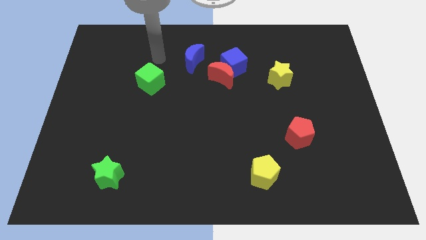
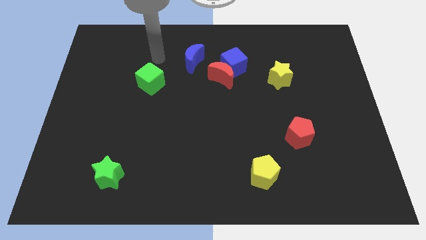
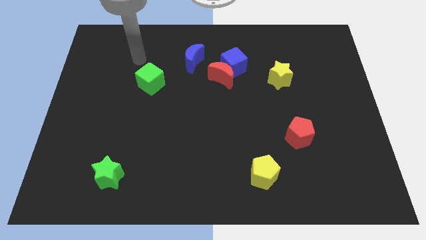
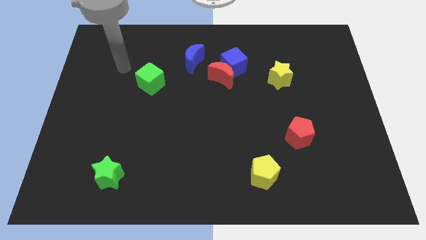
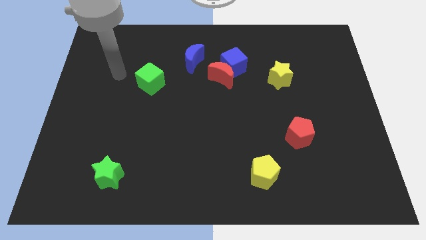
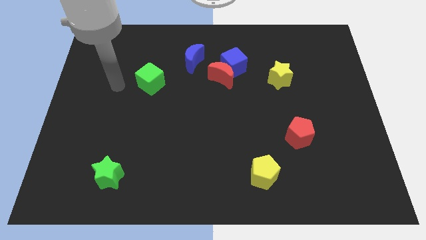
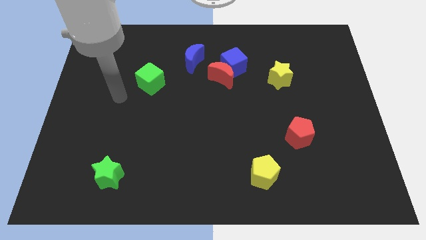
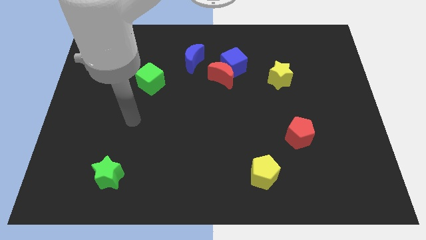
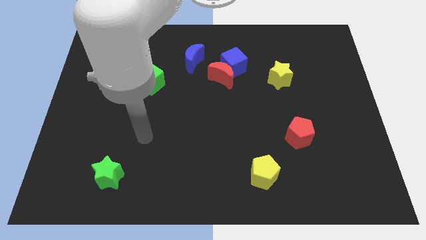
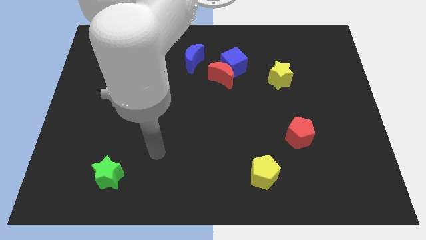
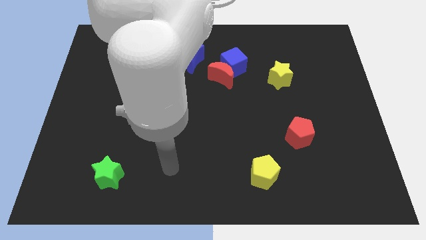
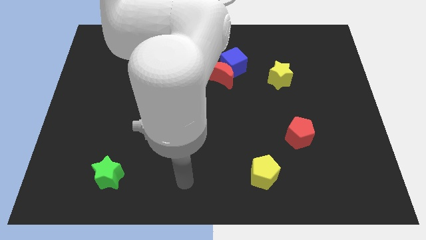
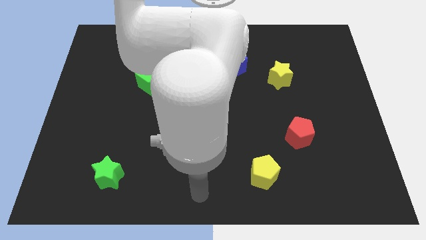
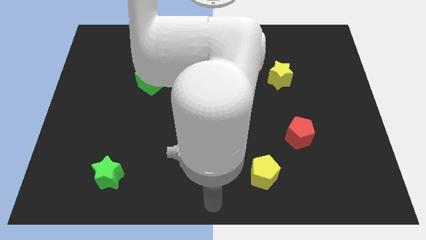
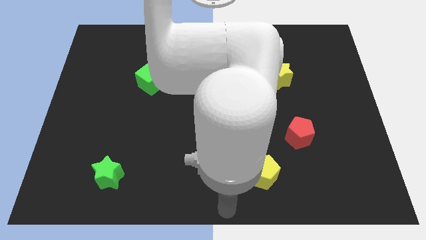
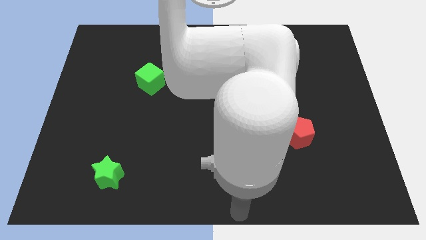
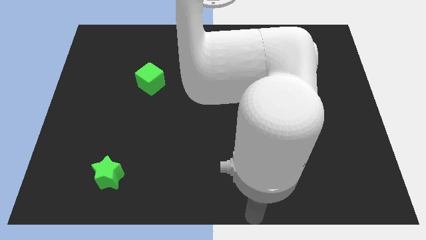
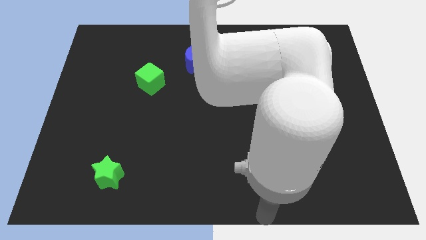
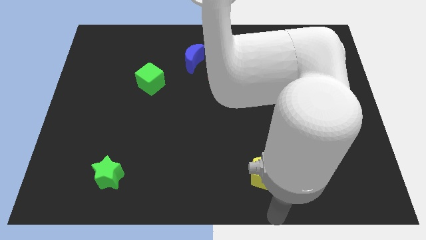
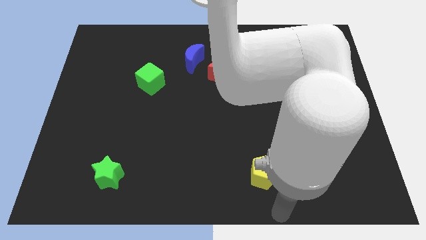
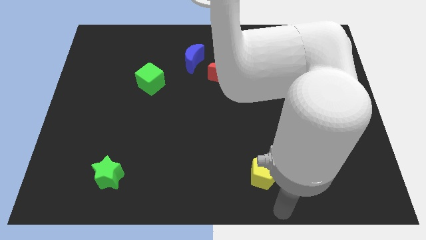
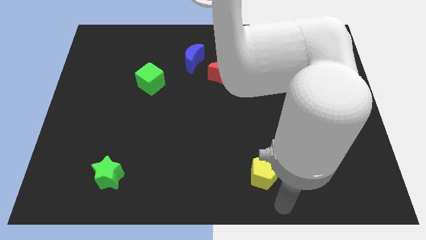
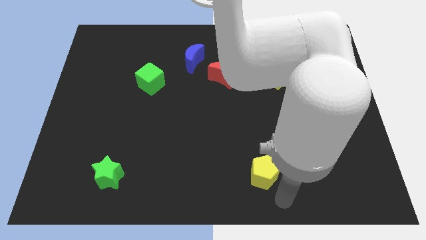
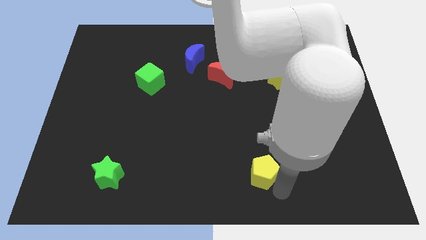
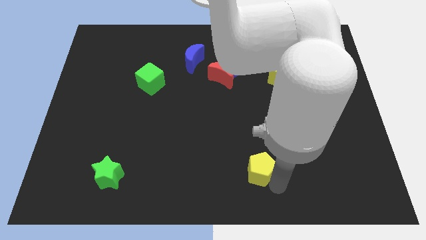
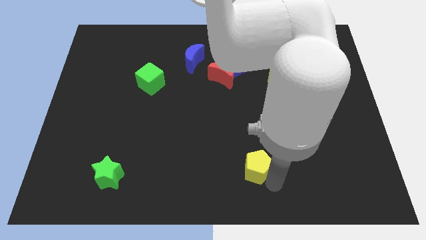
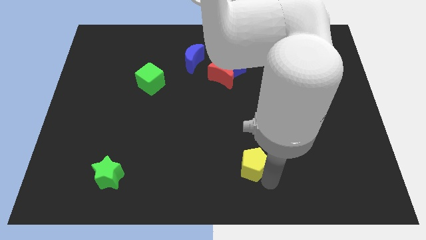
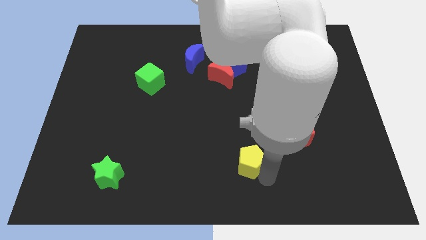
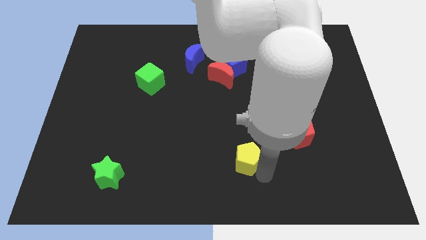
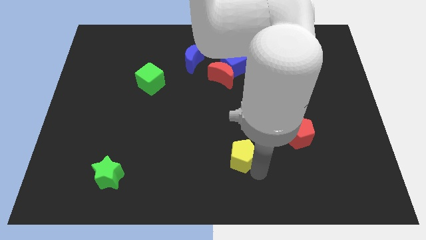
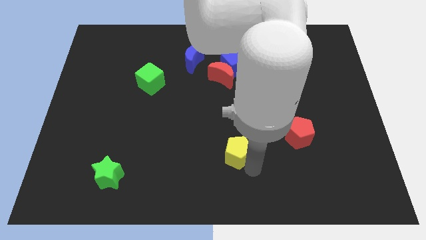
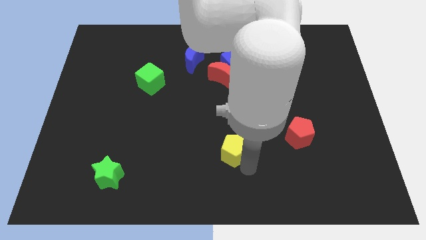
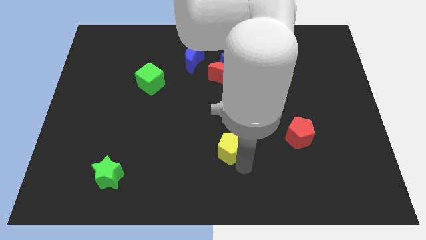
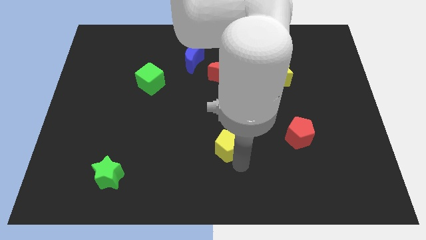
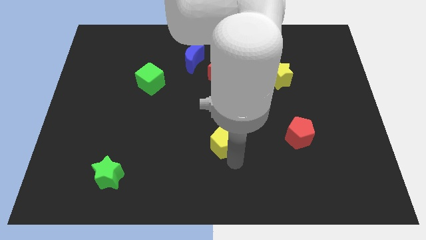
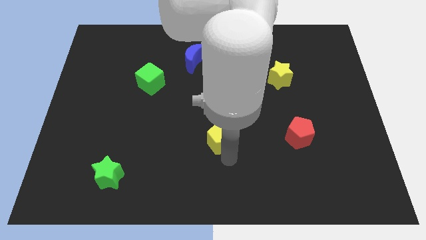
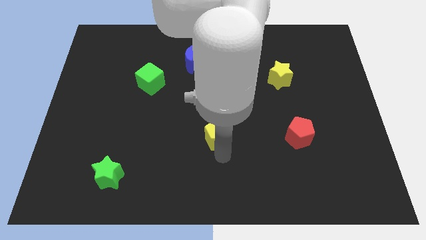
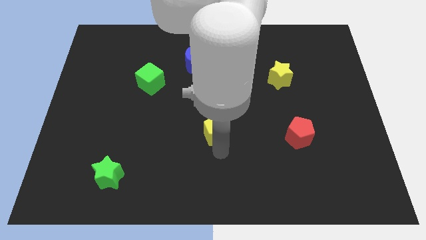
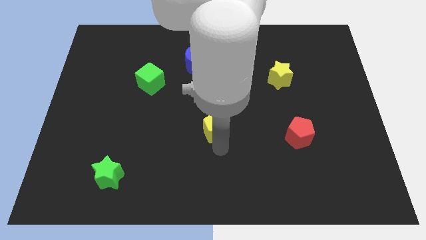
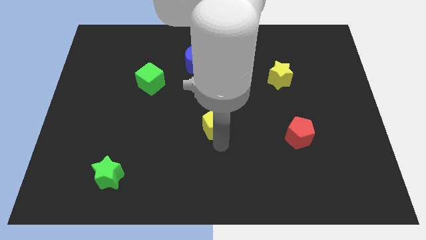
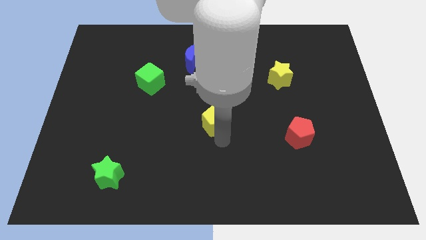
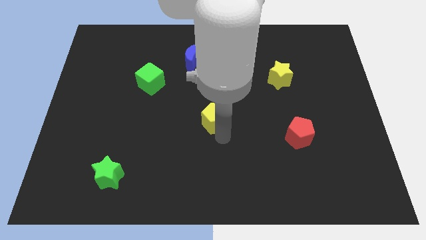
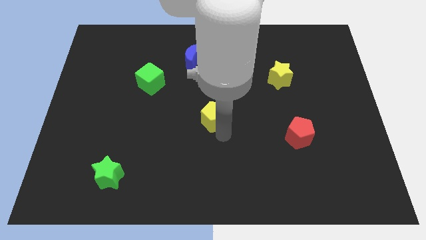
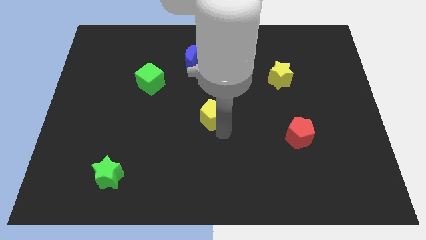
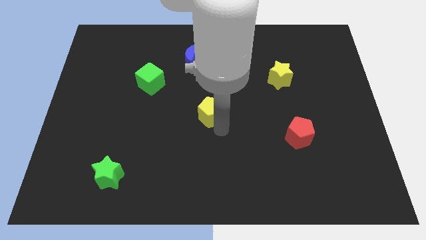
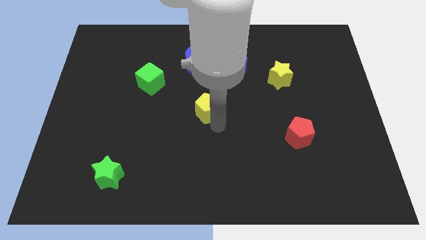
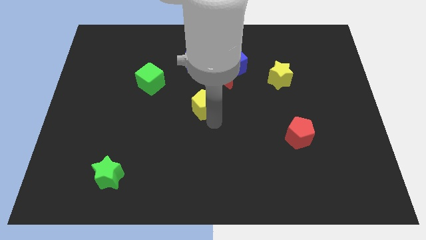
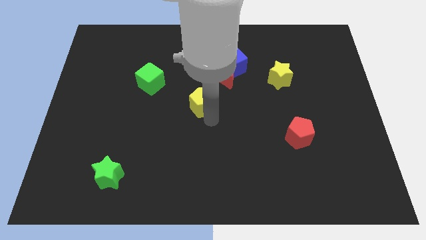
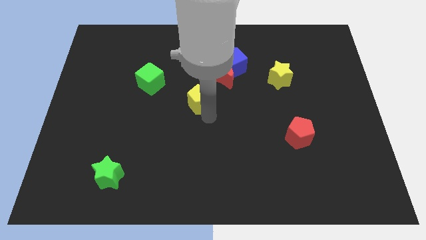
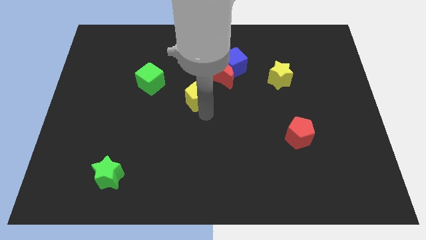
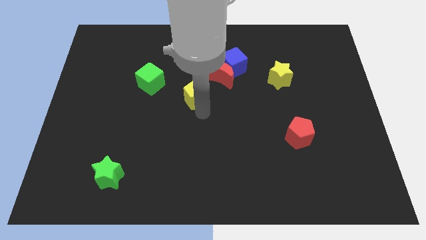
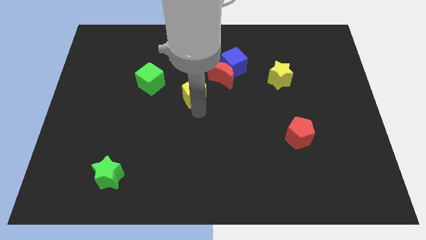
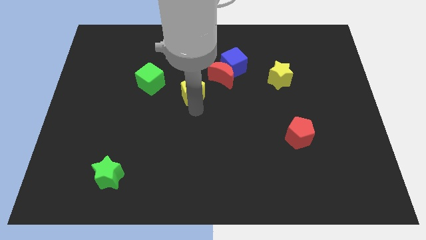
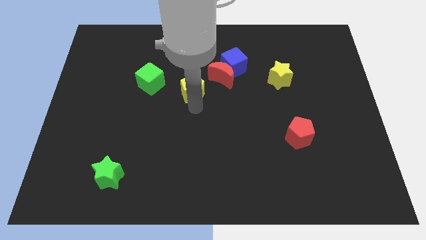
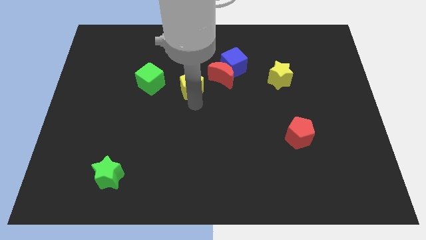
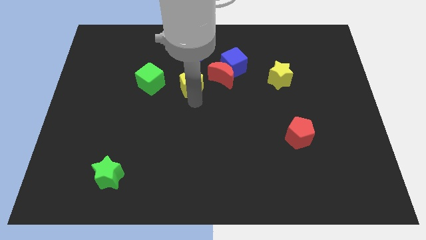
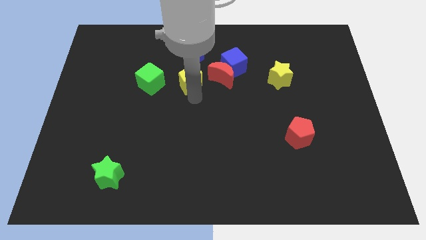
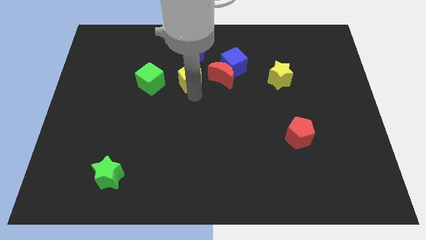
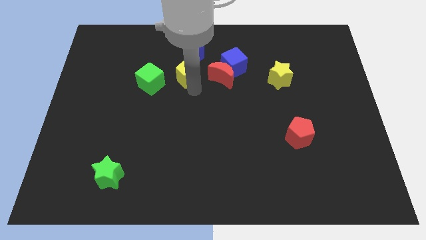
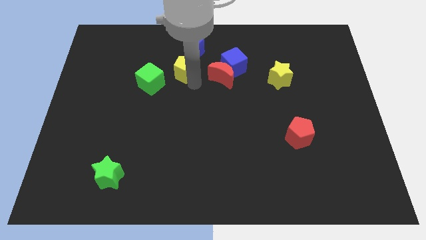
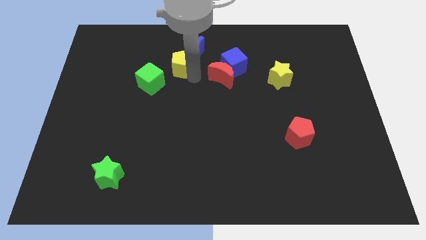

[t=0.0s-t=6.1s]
put the yellow pentagon next to the blue moon

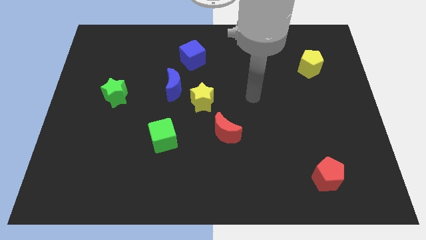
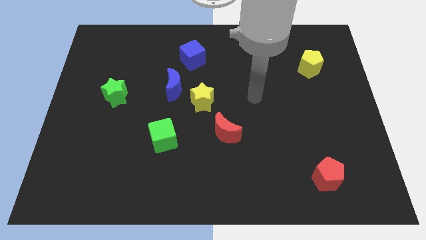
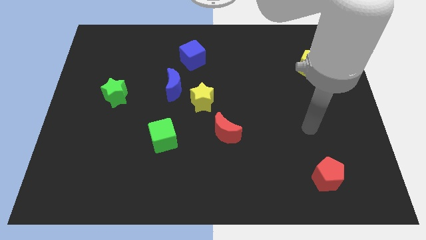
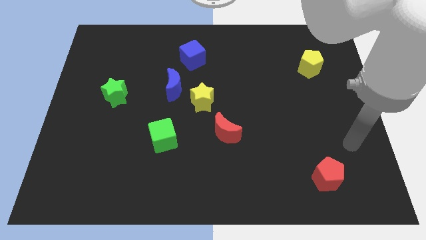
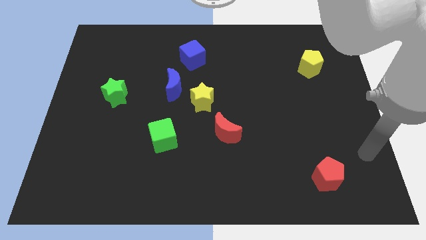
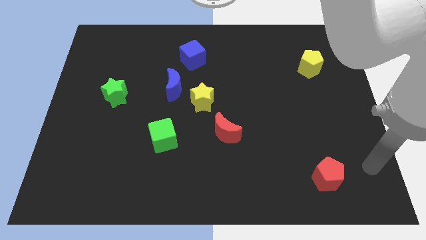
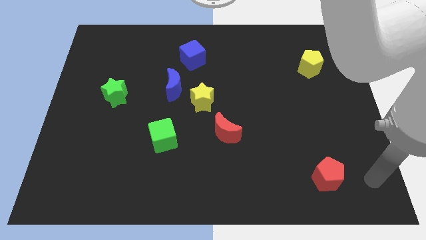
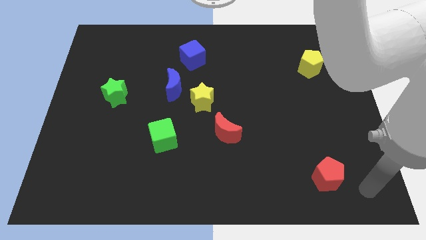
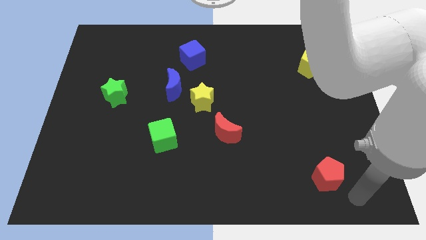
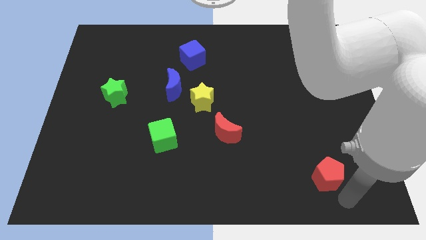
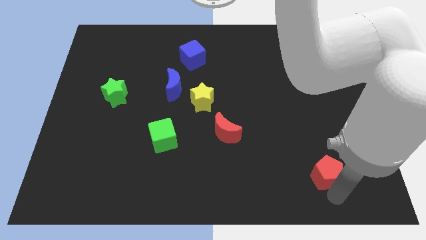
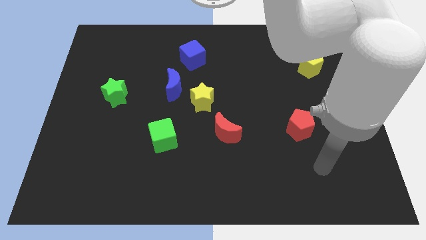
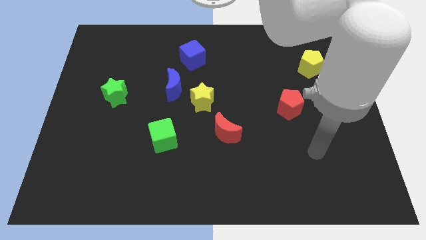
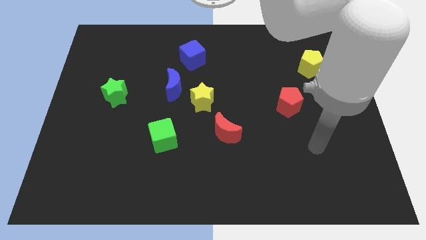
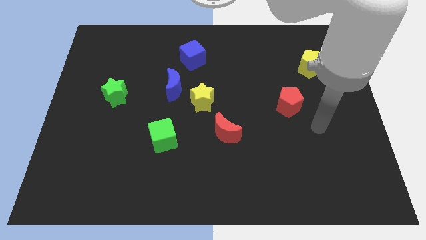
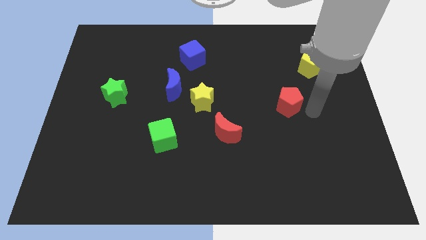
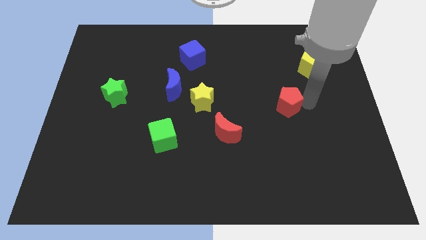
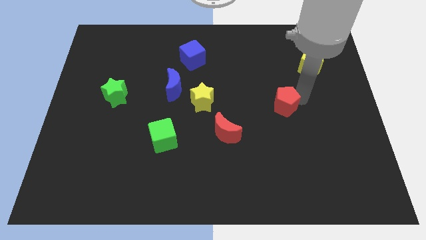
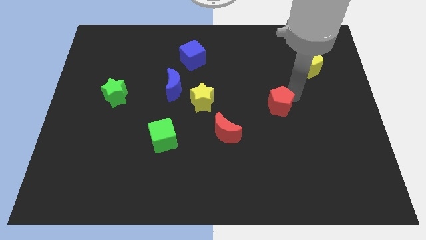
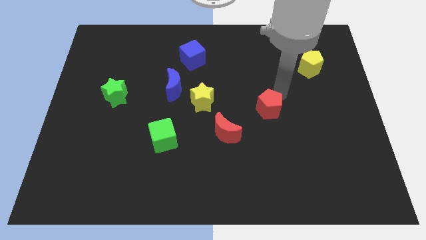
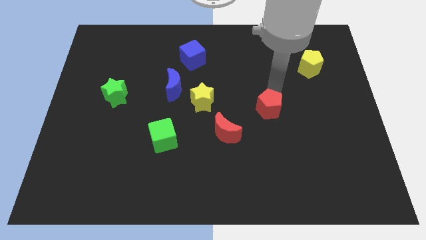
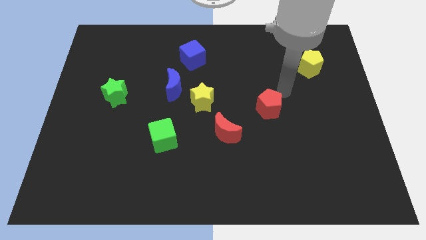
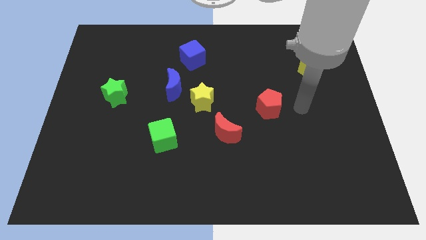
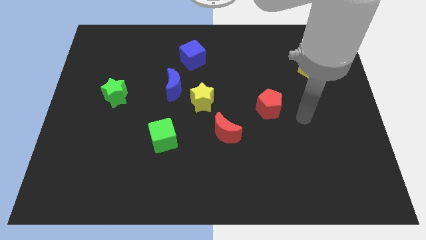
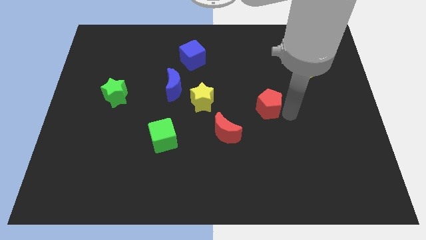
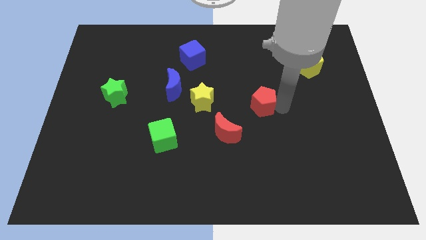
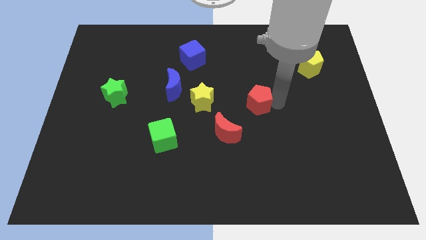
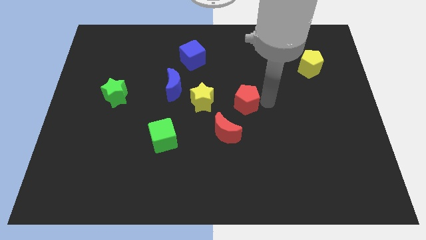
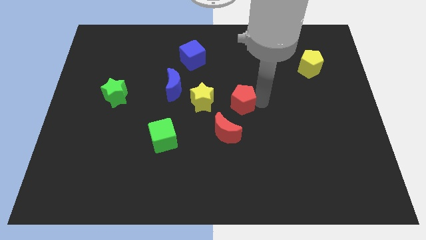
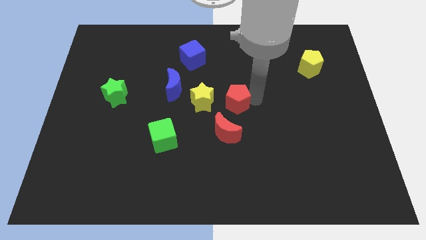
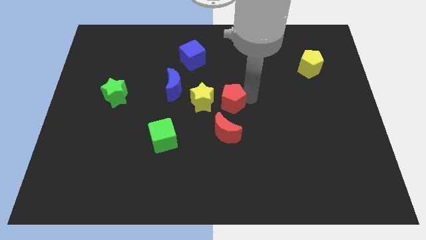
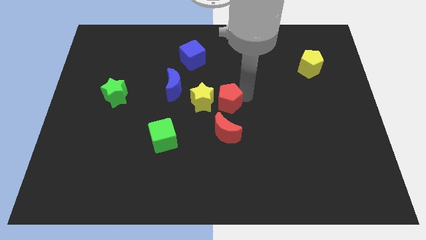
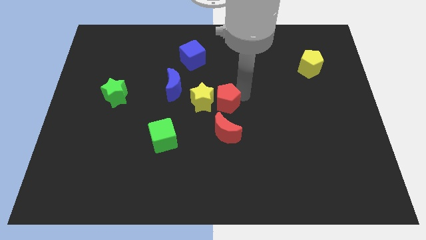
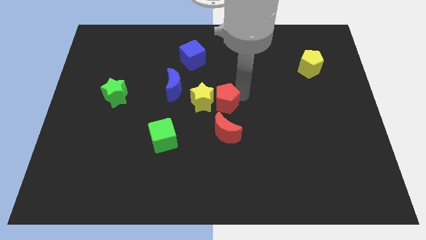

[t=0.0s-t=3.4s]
put the red pentagon towards the yellow star
